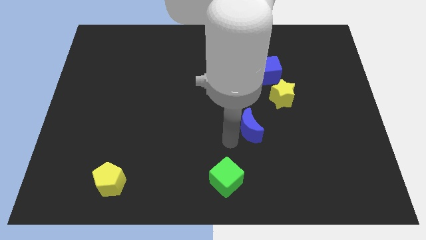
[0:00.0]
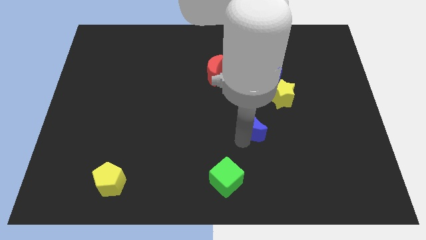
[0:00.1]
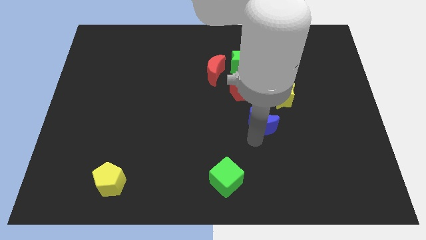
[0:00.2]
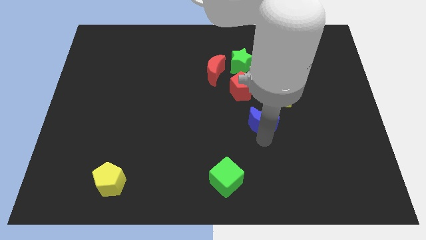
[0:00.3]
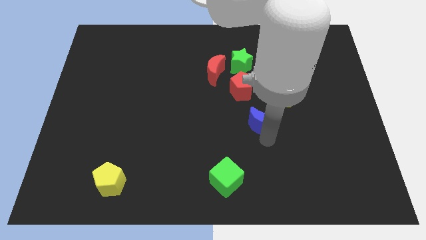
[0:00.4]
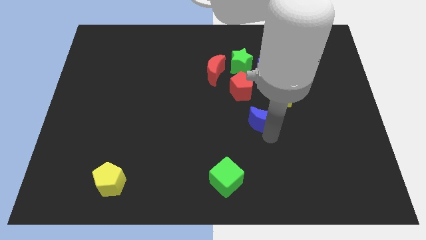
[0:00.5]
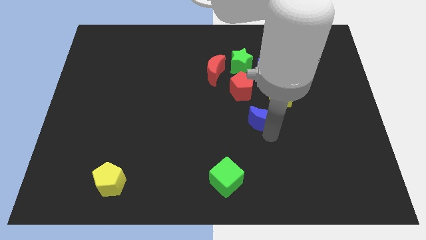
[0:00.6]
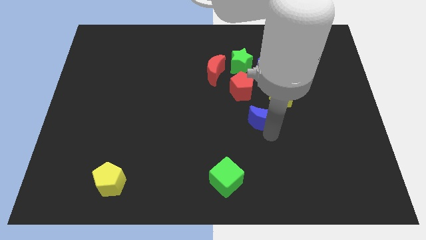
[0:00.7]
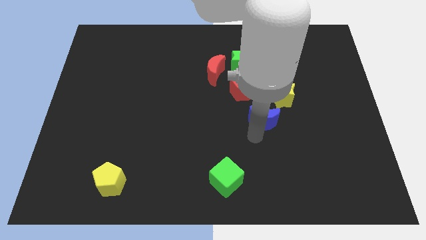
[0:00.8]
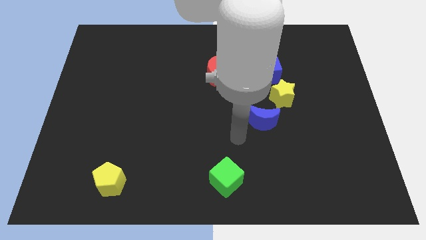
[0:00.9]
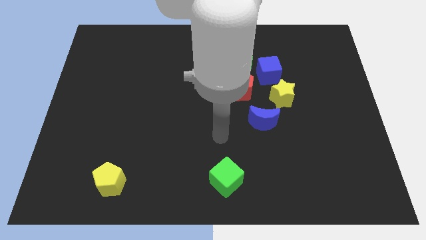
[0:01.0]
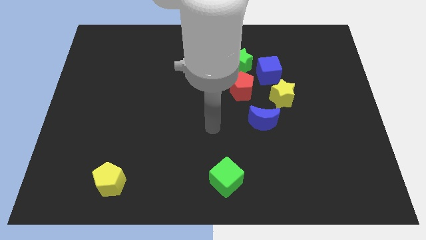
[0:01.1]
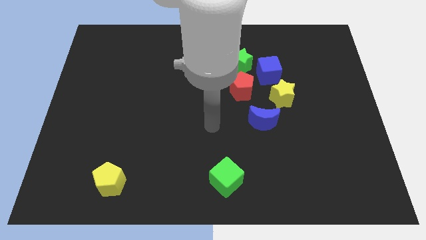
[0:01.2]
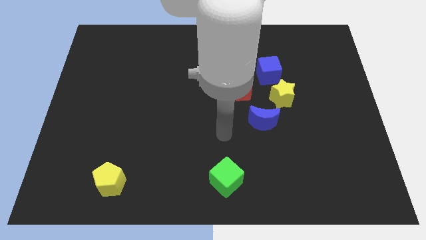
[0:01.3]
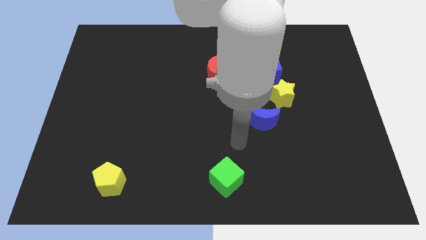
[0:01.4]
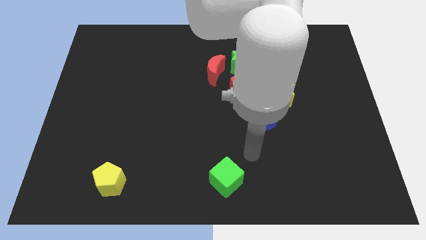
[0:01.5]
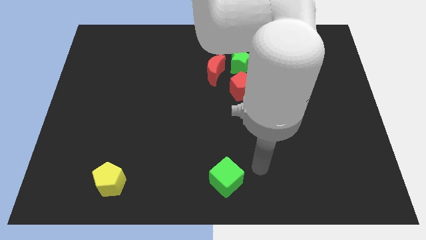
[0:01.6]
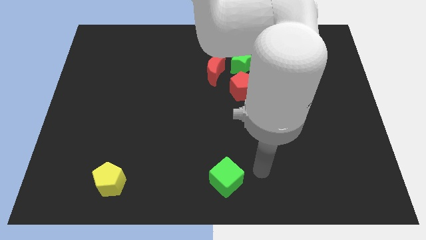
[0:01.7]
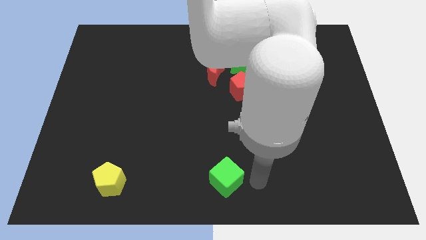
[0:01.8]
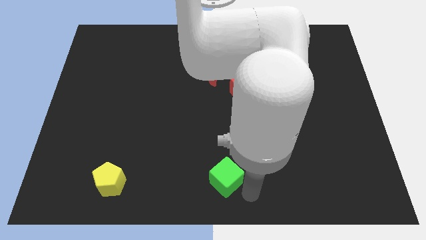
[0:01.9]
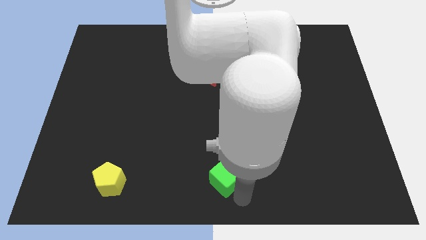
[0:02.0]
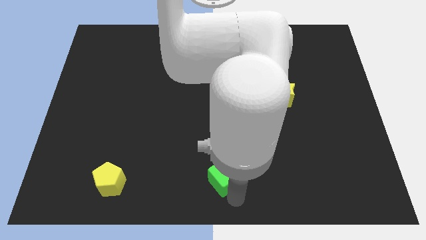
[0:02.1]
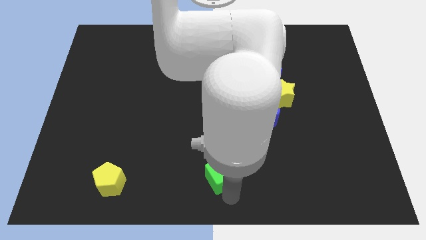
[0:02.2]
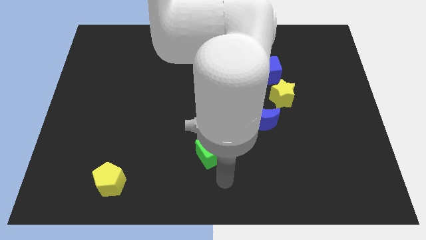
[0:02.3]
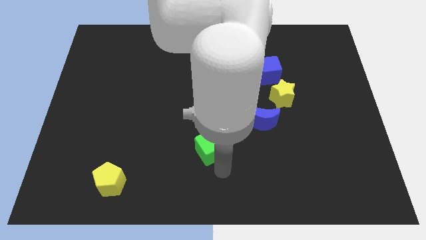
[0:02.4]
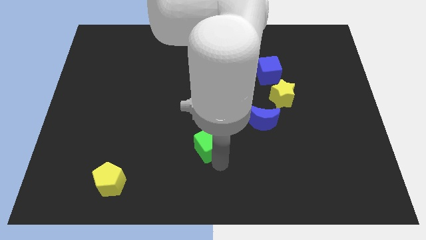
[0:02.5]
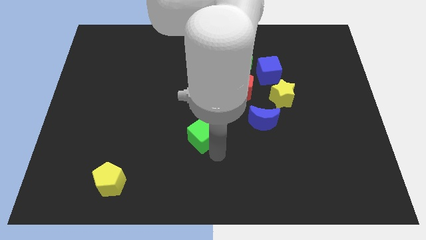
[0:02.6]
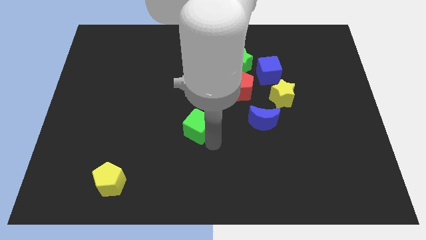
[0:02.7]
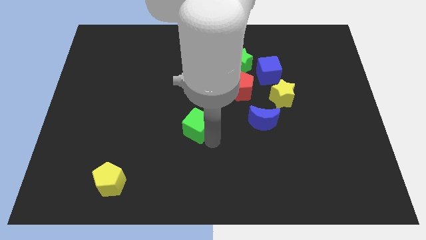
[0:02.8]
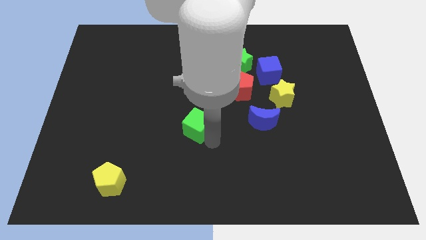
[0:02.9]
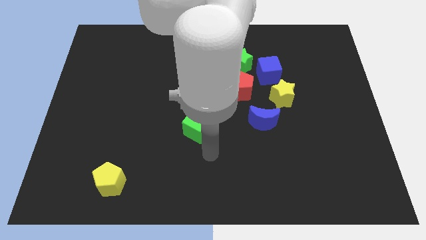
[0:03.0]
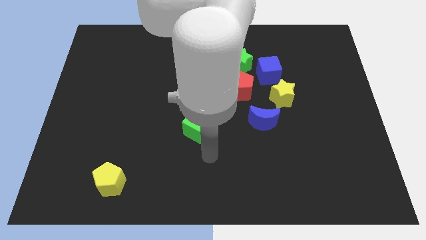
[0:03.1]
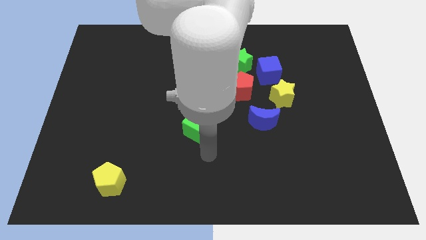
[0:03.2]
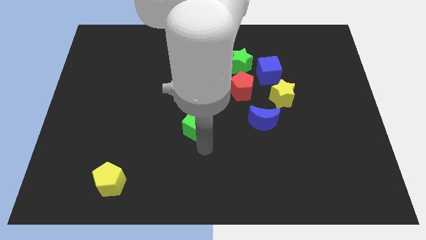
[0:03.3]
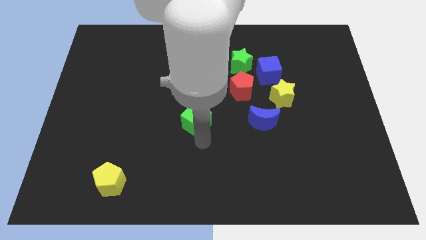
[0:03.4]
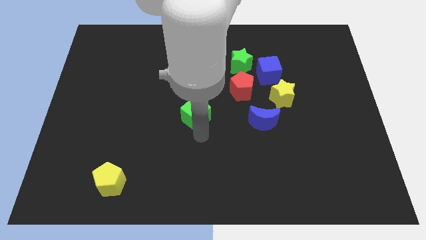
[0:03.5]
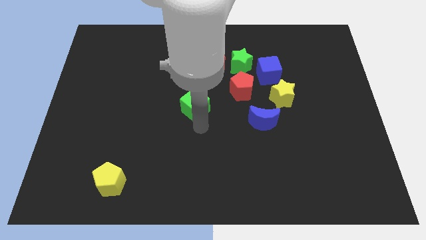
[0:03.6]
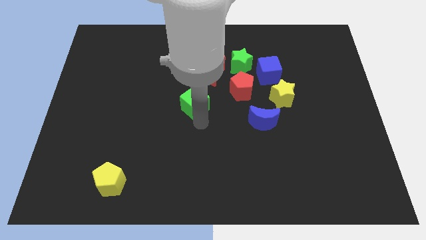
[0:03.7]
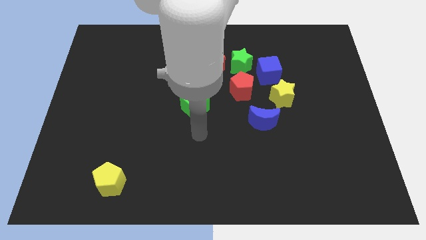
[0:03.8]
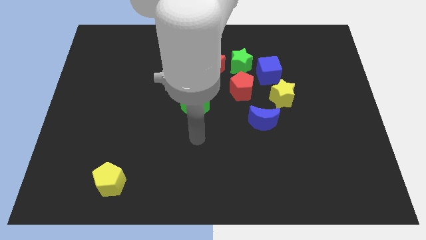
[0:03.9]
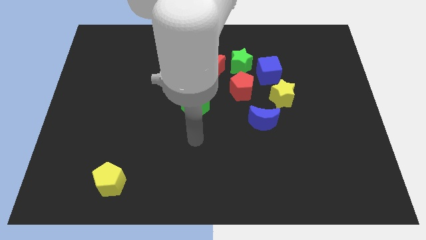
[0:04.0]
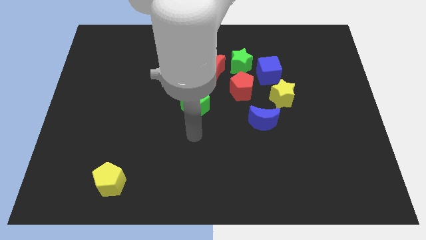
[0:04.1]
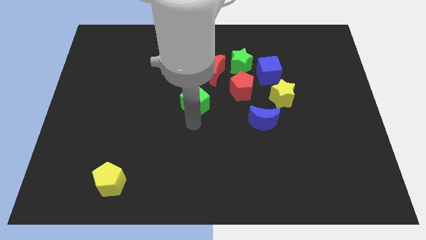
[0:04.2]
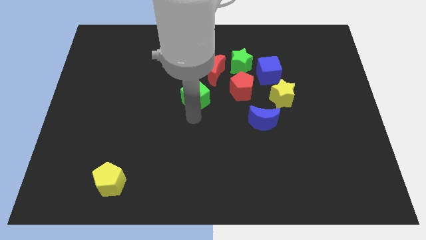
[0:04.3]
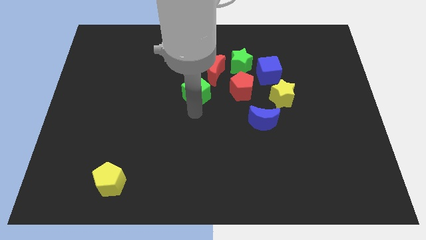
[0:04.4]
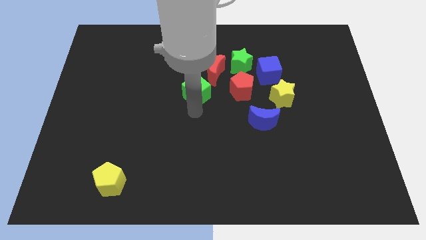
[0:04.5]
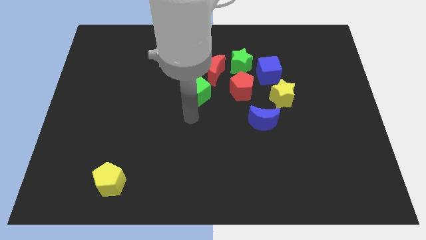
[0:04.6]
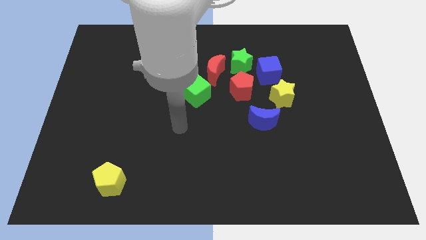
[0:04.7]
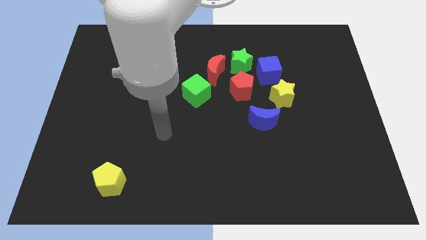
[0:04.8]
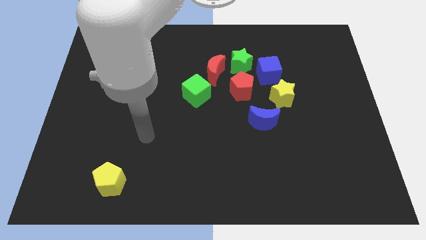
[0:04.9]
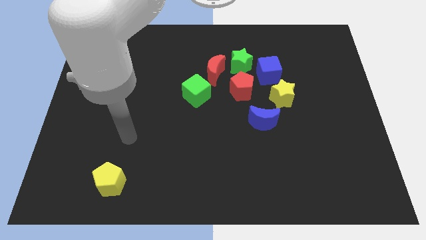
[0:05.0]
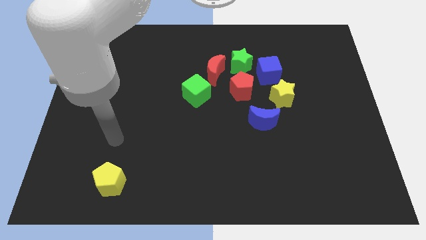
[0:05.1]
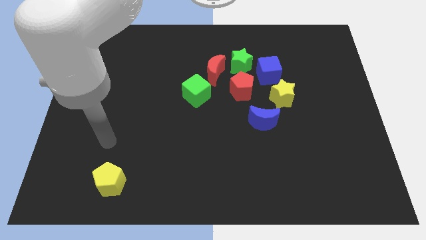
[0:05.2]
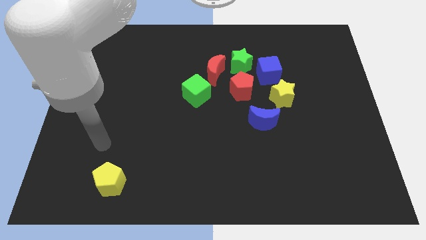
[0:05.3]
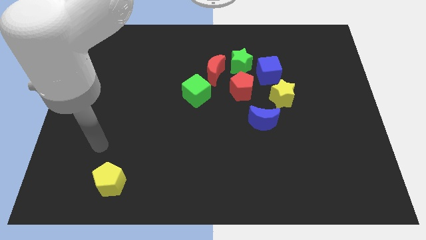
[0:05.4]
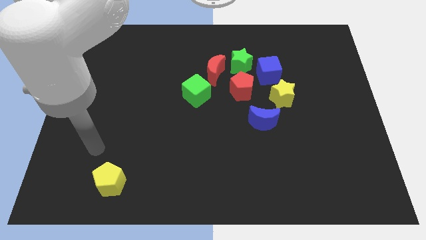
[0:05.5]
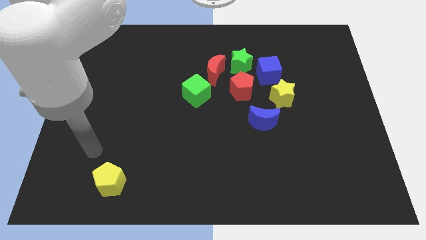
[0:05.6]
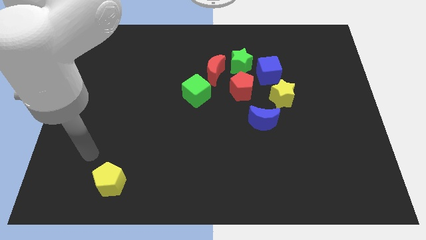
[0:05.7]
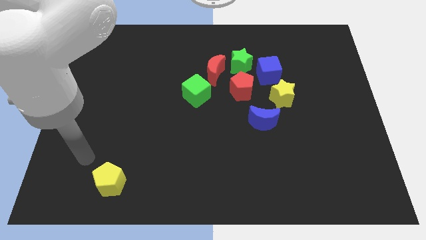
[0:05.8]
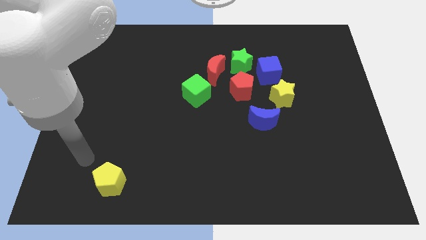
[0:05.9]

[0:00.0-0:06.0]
move the green cube close to the red moon

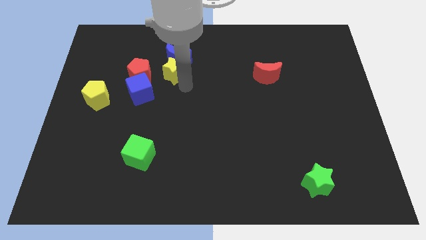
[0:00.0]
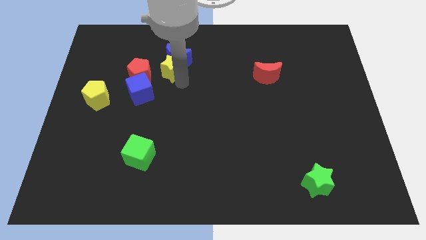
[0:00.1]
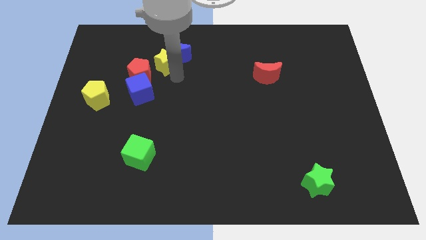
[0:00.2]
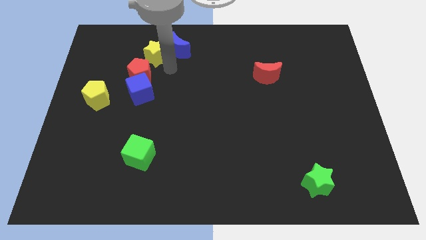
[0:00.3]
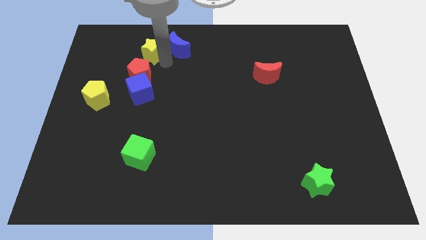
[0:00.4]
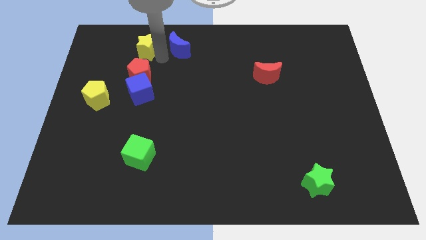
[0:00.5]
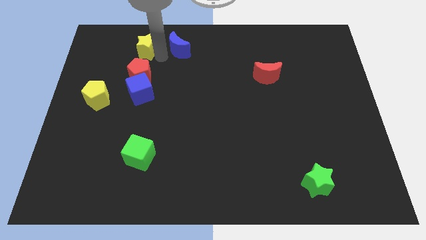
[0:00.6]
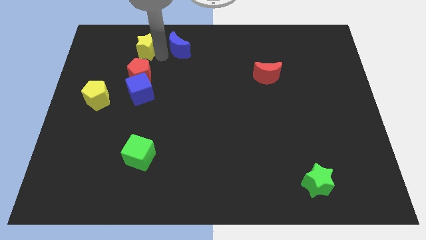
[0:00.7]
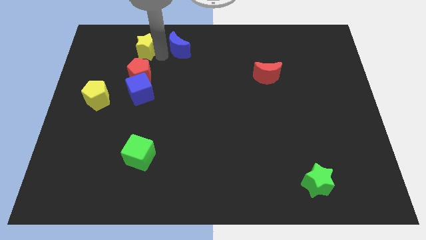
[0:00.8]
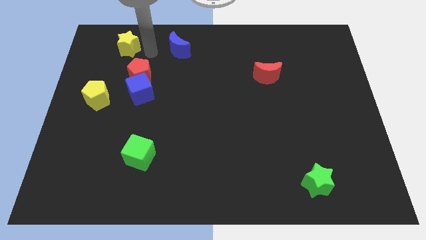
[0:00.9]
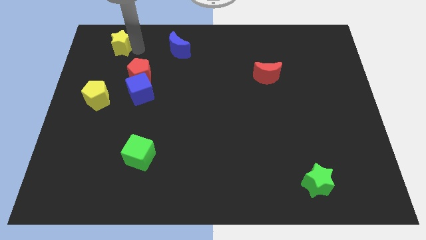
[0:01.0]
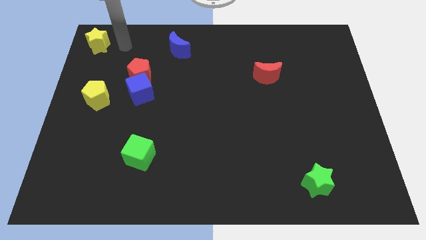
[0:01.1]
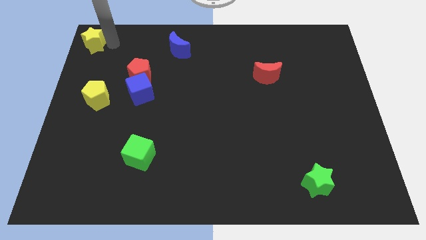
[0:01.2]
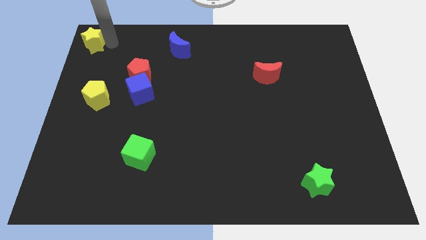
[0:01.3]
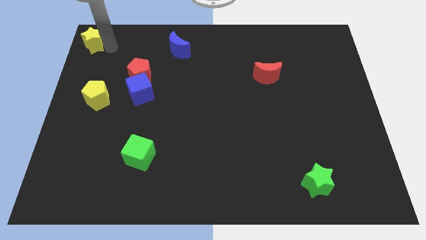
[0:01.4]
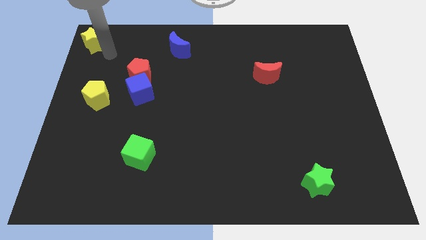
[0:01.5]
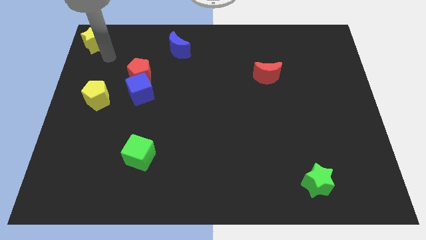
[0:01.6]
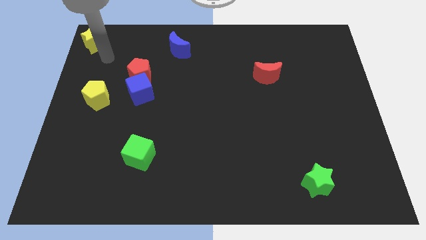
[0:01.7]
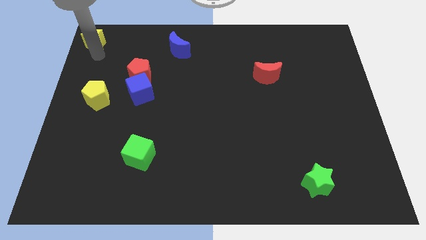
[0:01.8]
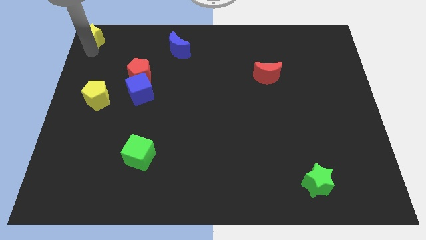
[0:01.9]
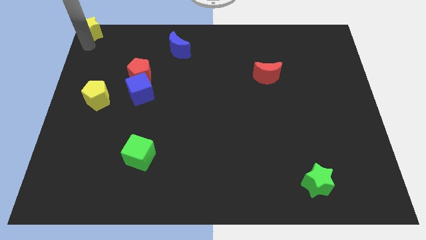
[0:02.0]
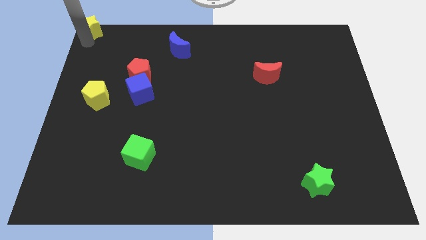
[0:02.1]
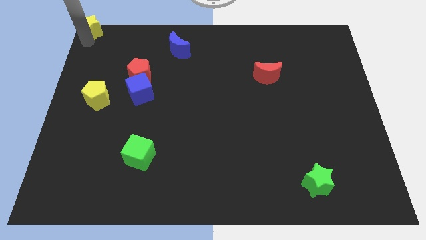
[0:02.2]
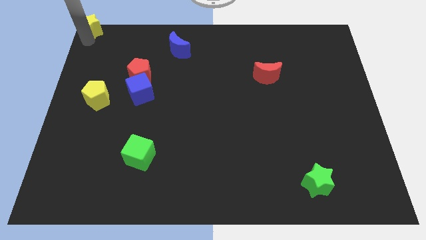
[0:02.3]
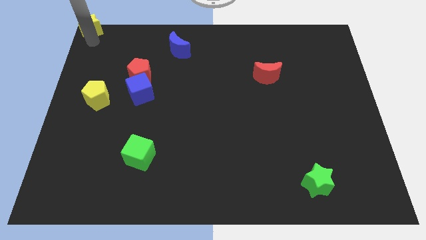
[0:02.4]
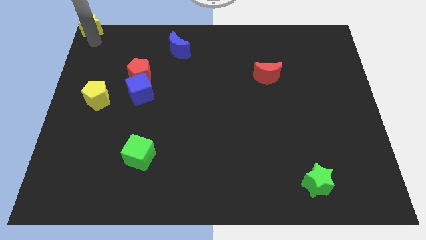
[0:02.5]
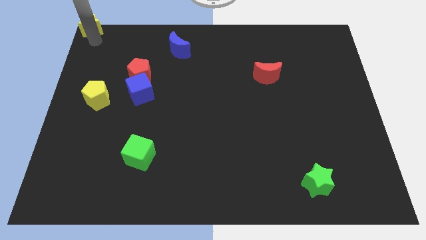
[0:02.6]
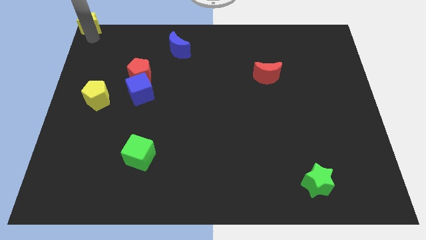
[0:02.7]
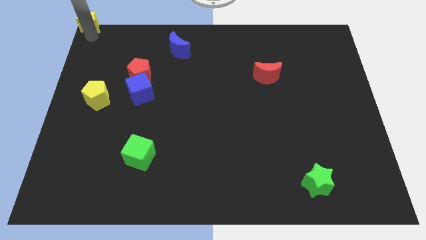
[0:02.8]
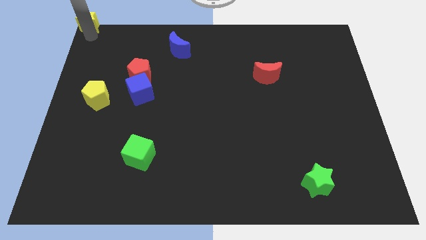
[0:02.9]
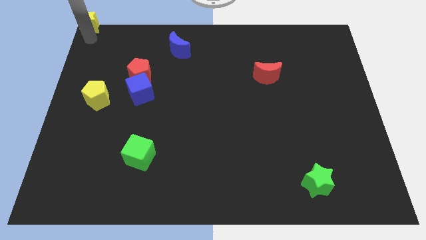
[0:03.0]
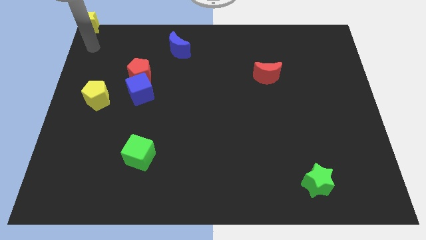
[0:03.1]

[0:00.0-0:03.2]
move the yellow star to the top left corner of the board
